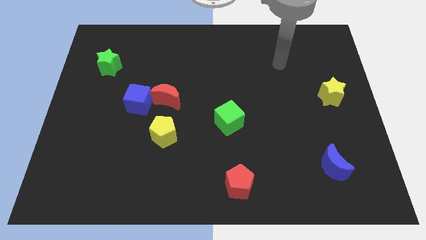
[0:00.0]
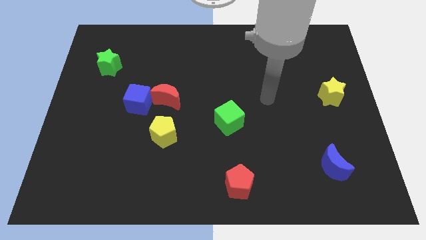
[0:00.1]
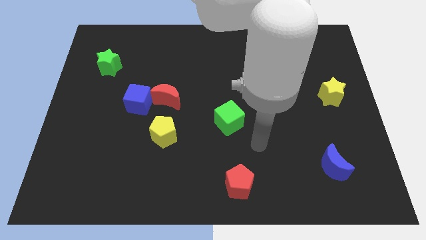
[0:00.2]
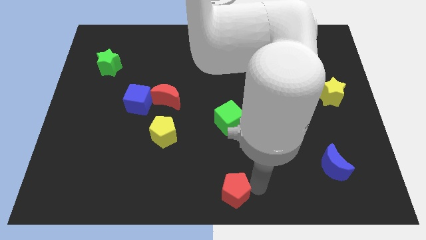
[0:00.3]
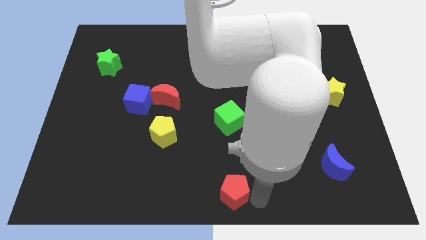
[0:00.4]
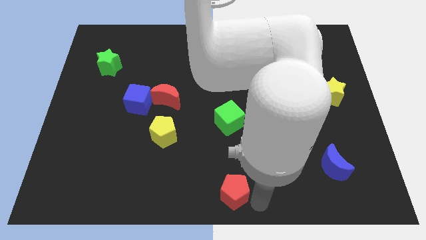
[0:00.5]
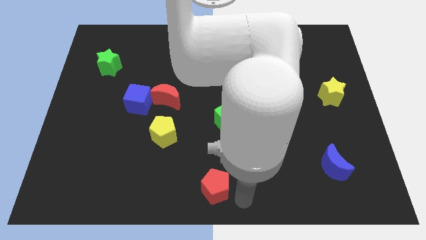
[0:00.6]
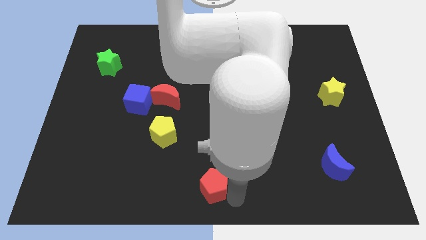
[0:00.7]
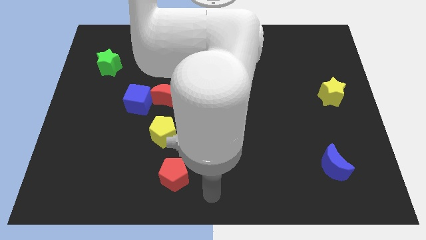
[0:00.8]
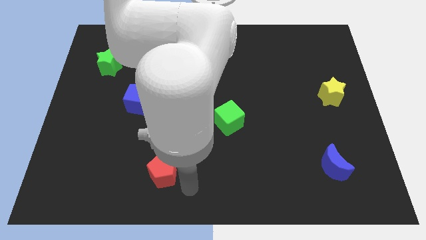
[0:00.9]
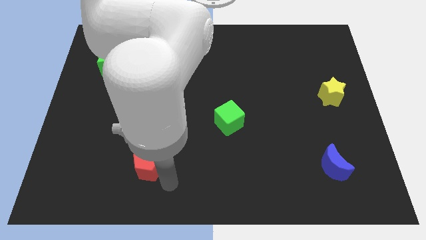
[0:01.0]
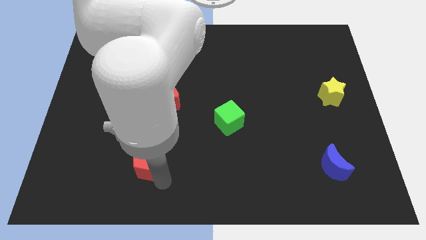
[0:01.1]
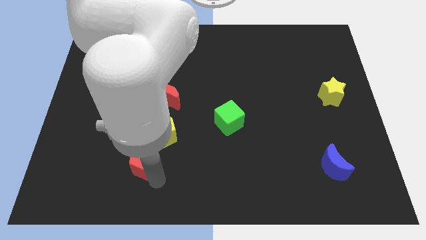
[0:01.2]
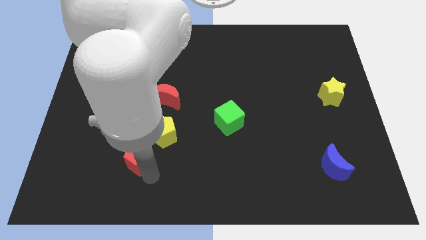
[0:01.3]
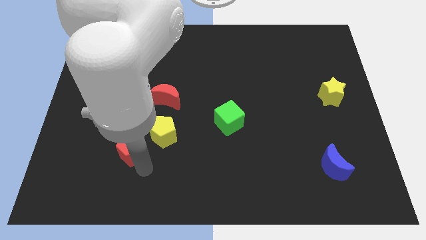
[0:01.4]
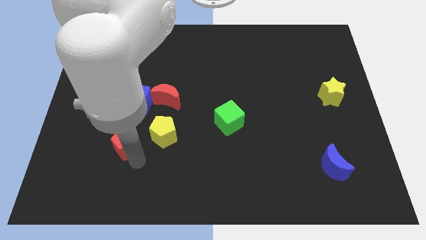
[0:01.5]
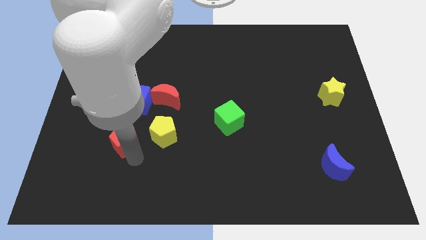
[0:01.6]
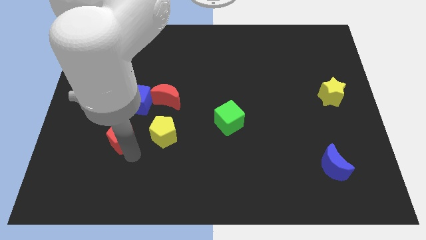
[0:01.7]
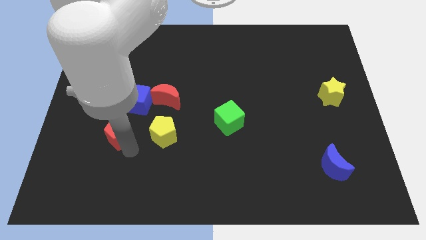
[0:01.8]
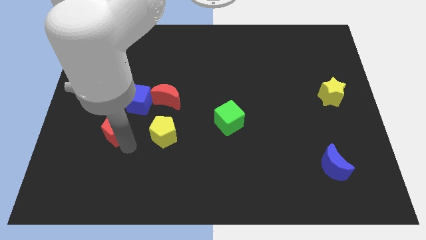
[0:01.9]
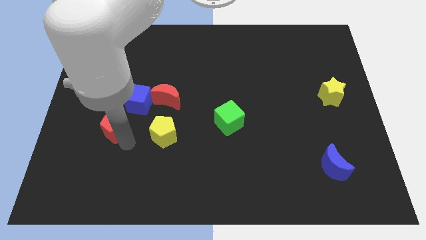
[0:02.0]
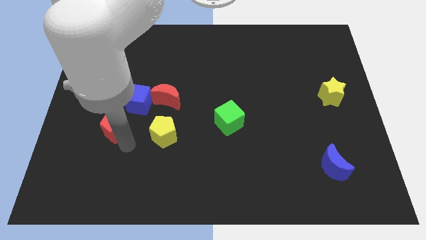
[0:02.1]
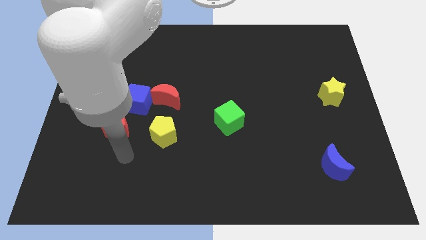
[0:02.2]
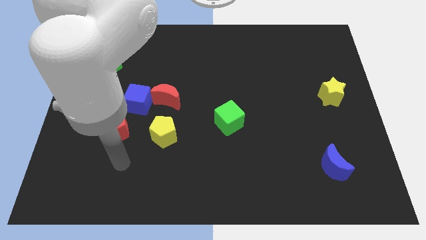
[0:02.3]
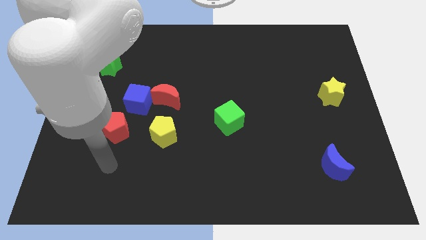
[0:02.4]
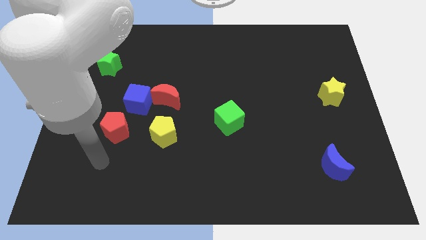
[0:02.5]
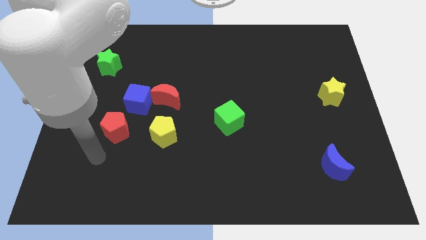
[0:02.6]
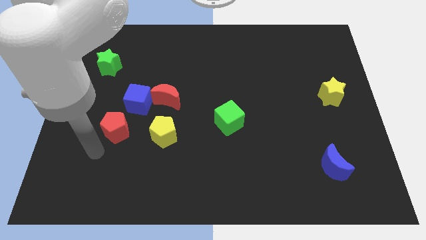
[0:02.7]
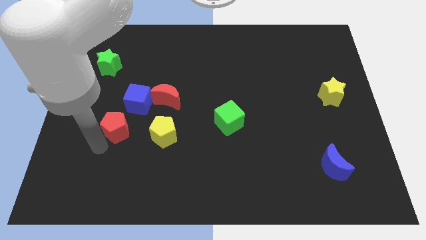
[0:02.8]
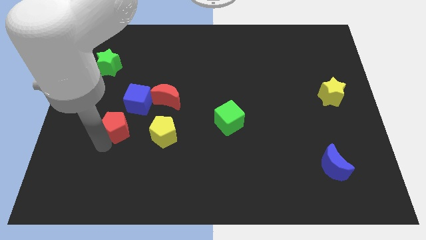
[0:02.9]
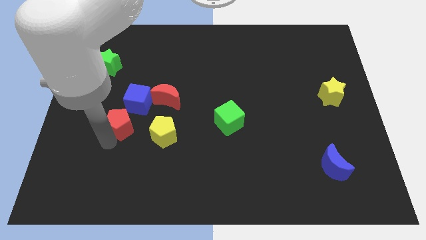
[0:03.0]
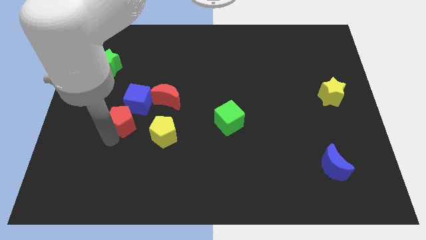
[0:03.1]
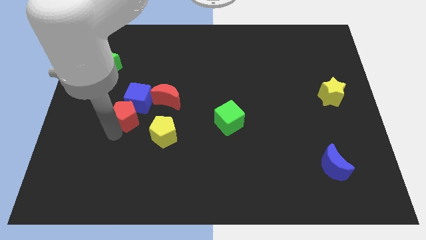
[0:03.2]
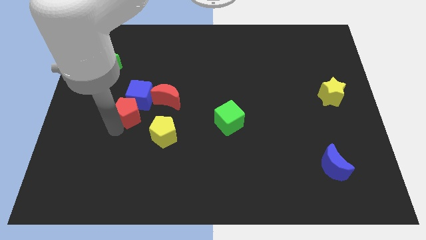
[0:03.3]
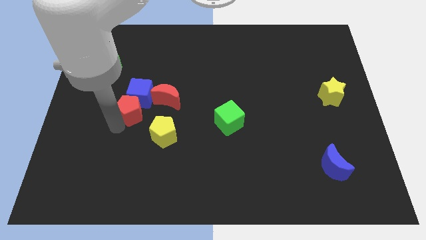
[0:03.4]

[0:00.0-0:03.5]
push the red pentagon to the blue cube

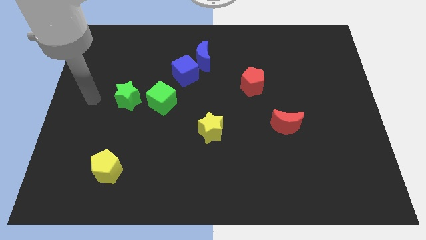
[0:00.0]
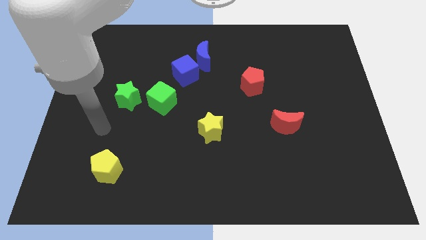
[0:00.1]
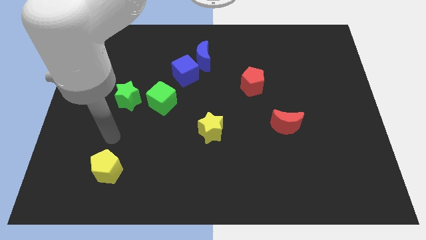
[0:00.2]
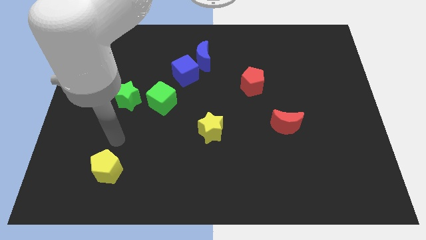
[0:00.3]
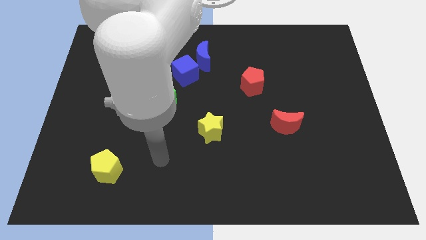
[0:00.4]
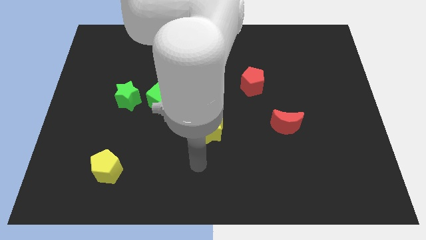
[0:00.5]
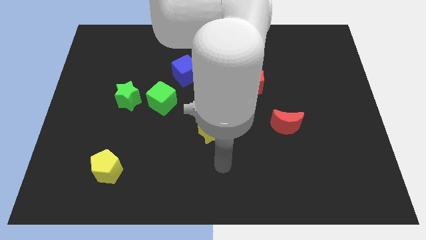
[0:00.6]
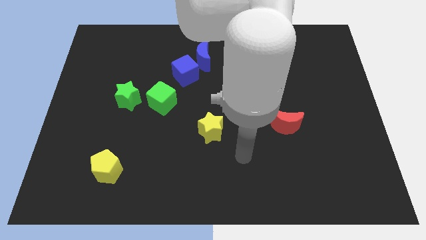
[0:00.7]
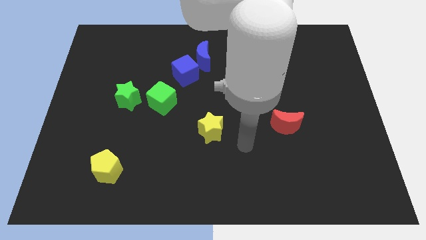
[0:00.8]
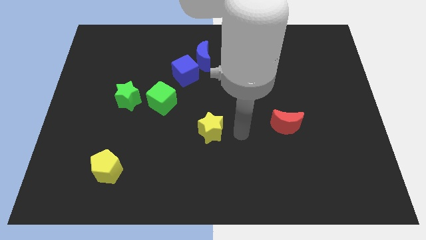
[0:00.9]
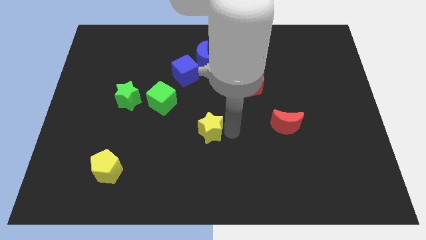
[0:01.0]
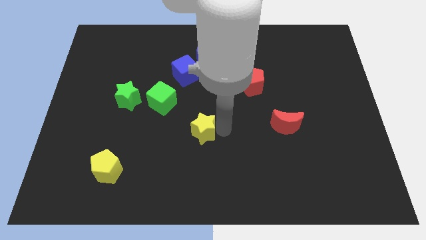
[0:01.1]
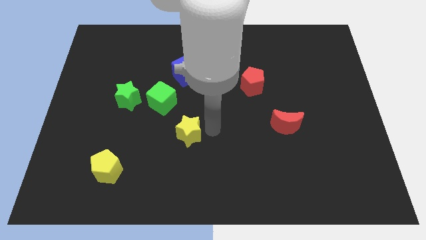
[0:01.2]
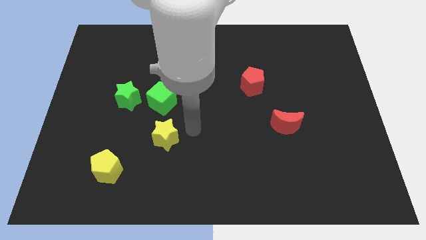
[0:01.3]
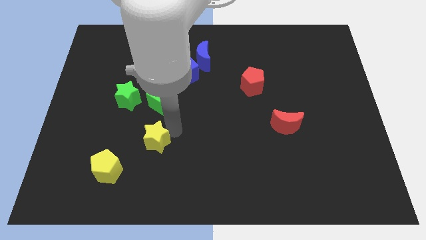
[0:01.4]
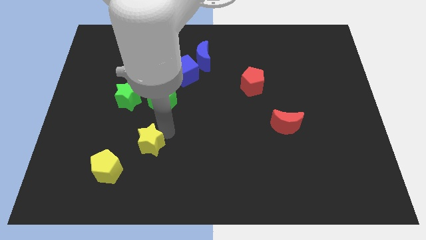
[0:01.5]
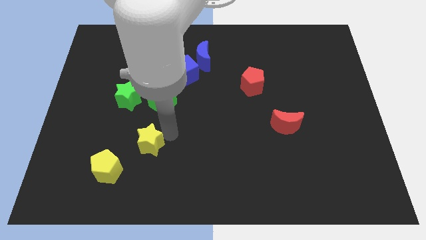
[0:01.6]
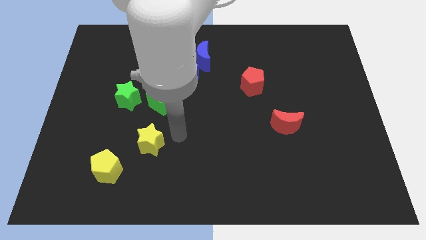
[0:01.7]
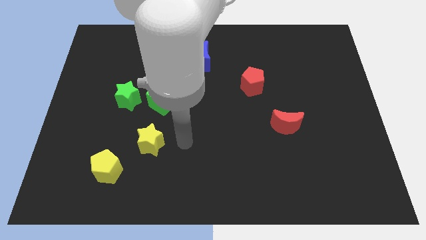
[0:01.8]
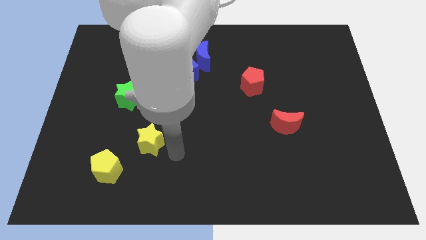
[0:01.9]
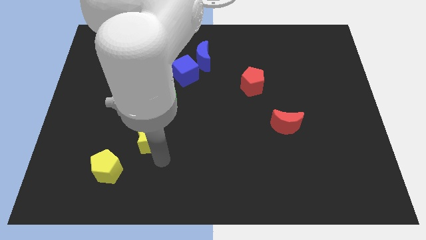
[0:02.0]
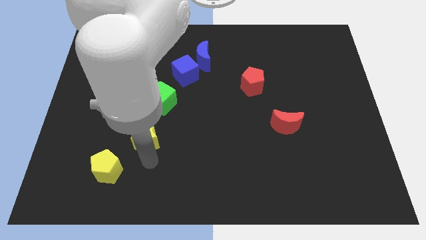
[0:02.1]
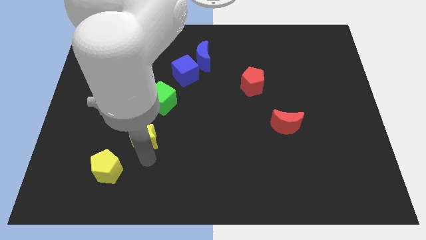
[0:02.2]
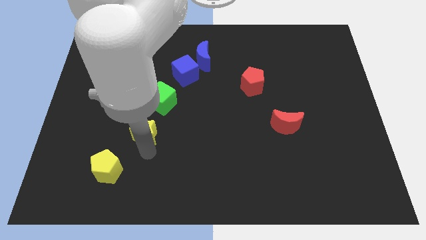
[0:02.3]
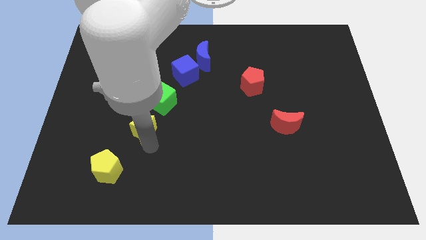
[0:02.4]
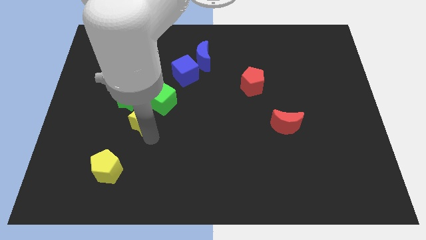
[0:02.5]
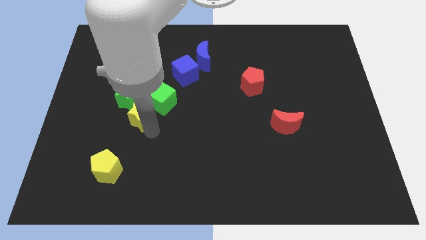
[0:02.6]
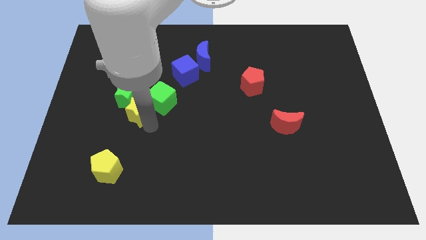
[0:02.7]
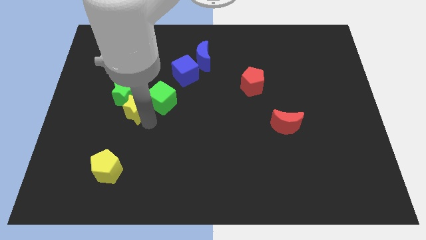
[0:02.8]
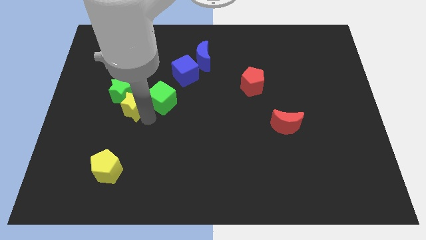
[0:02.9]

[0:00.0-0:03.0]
put the yellow star close to the green star

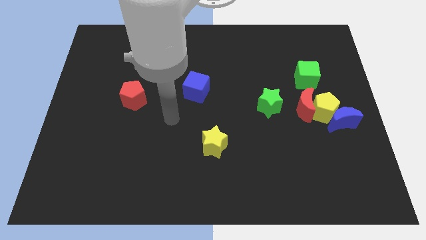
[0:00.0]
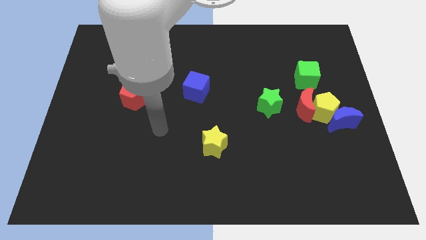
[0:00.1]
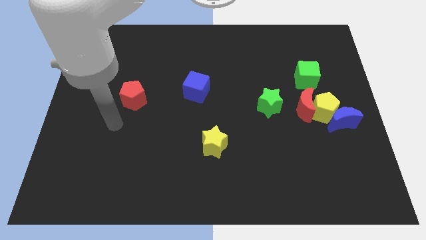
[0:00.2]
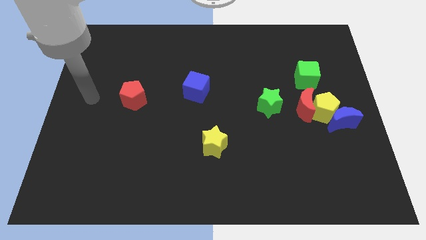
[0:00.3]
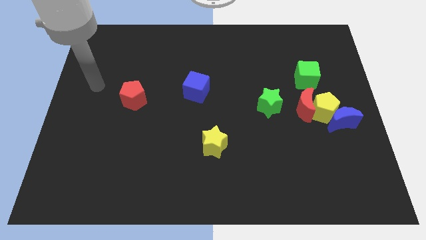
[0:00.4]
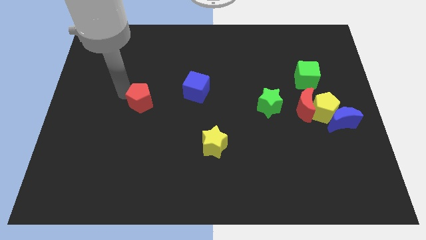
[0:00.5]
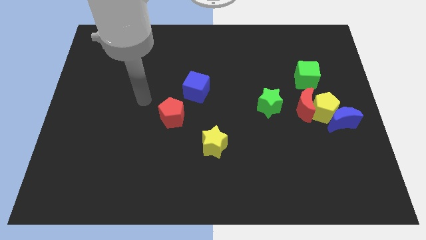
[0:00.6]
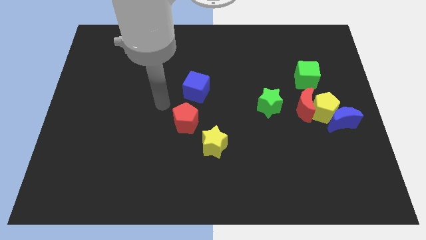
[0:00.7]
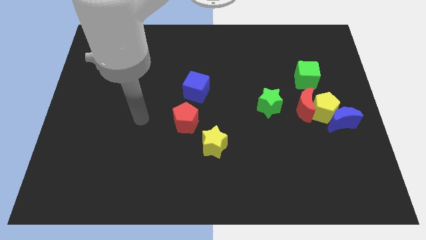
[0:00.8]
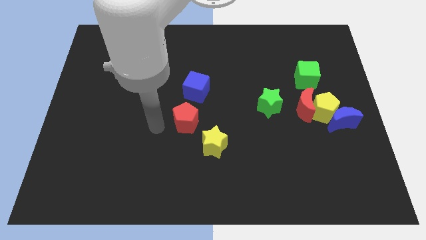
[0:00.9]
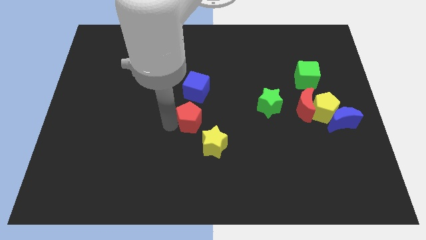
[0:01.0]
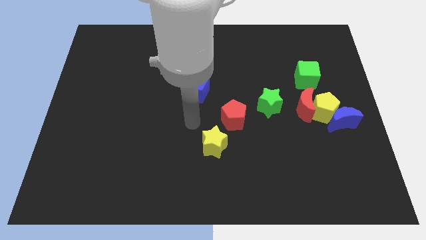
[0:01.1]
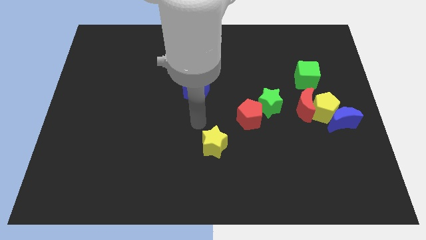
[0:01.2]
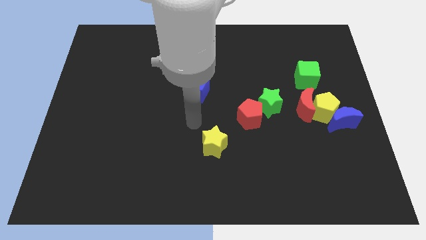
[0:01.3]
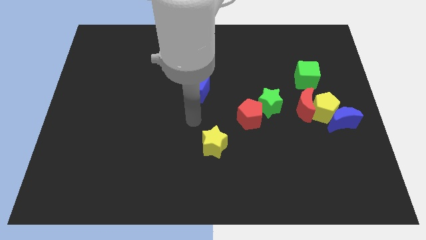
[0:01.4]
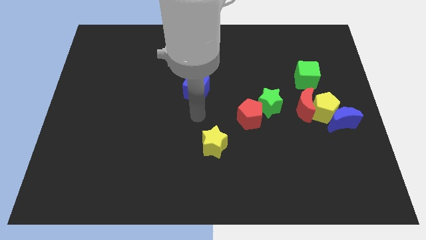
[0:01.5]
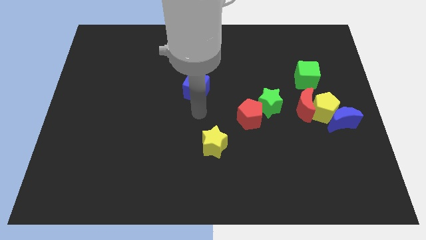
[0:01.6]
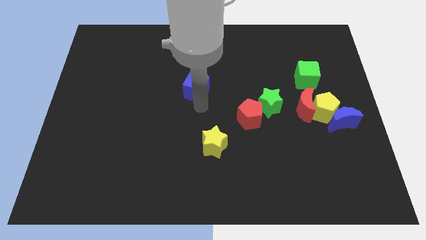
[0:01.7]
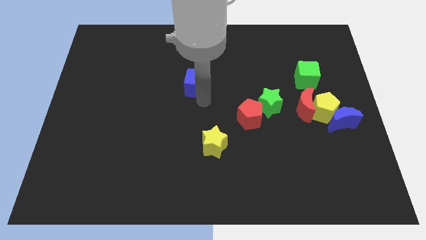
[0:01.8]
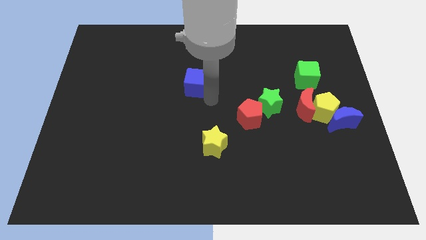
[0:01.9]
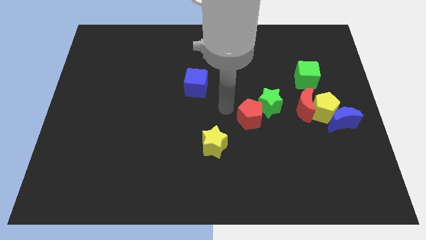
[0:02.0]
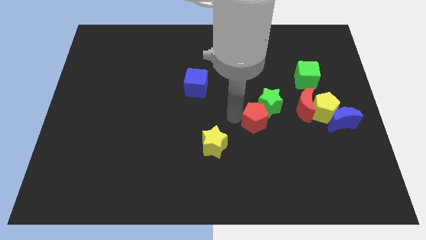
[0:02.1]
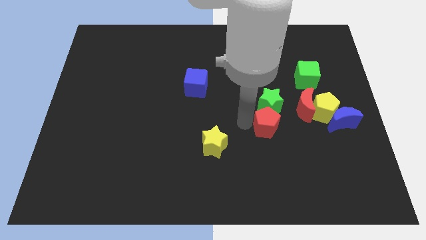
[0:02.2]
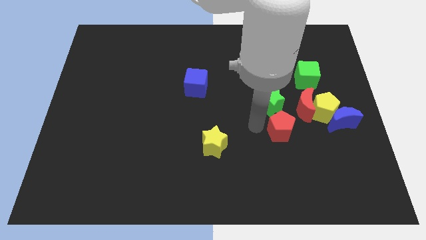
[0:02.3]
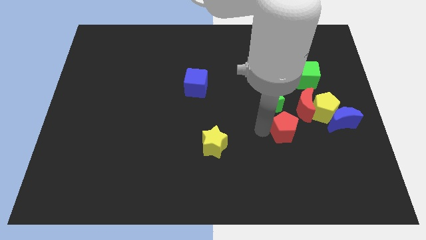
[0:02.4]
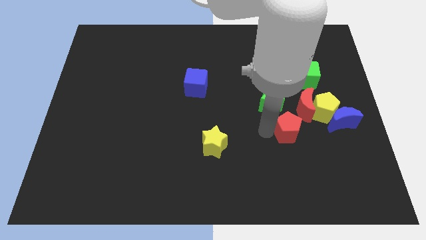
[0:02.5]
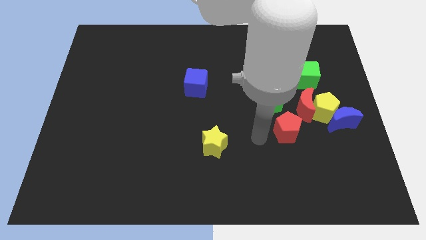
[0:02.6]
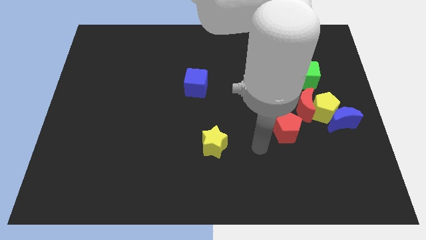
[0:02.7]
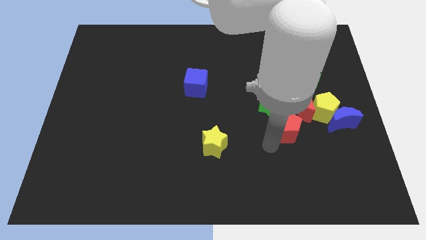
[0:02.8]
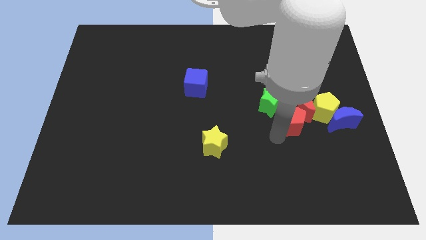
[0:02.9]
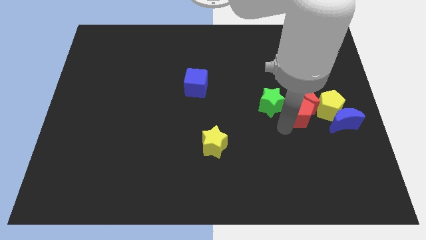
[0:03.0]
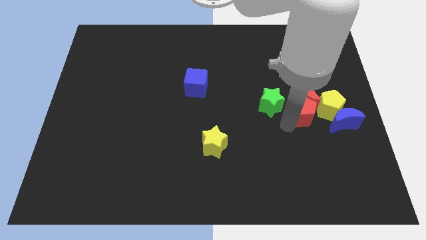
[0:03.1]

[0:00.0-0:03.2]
push the red pentagon to the red moon
